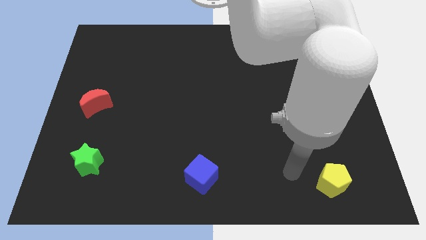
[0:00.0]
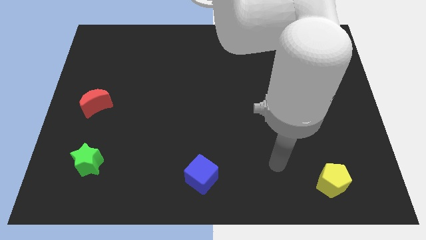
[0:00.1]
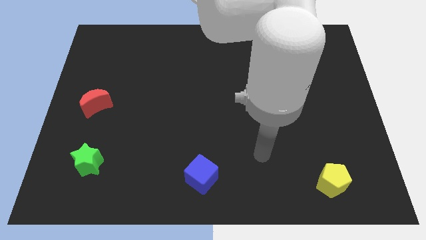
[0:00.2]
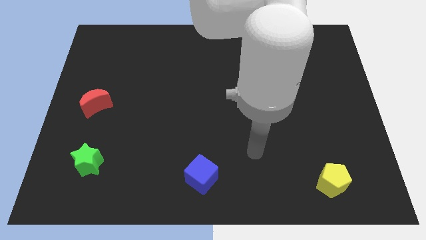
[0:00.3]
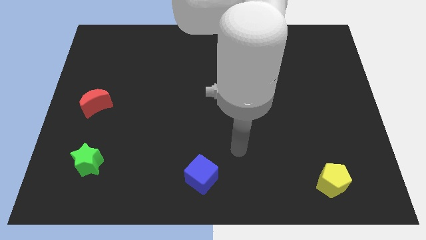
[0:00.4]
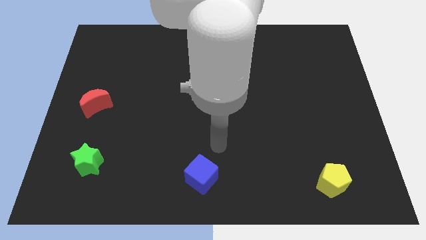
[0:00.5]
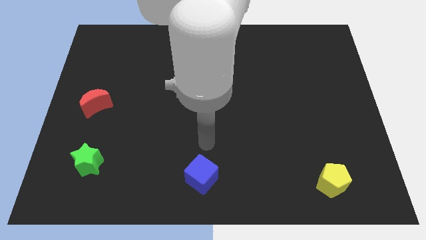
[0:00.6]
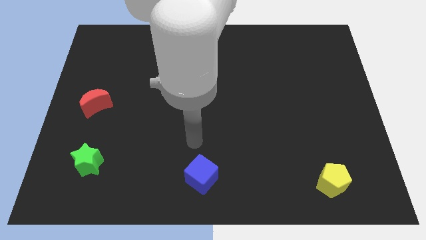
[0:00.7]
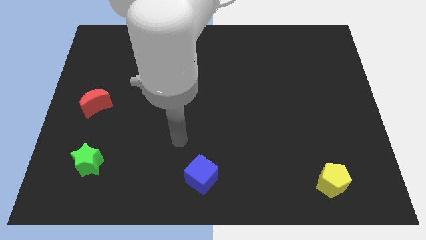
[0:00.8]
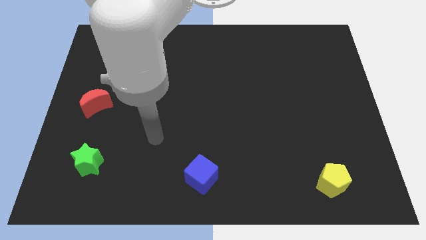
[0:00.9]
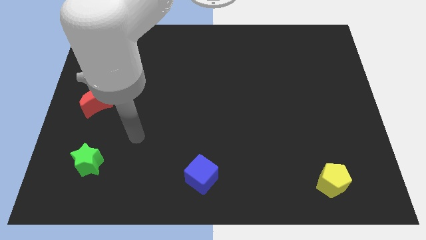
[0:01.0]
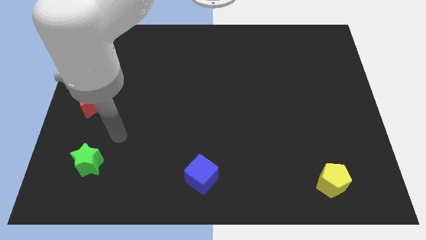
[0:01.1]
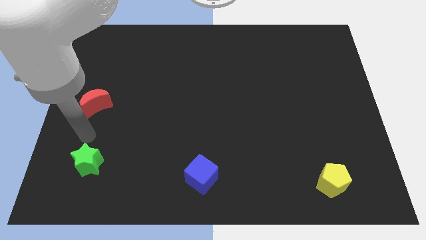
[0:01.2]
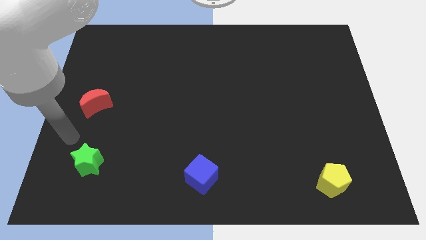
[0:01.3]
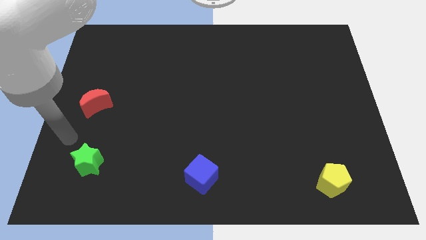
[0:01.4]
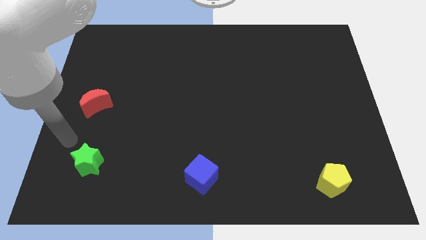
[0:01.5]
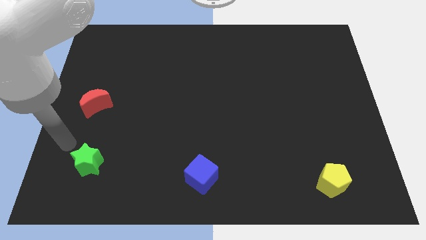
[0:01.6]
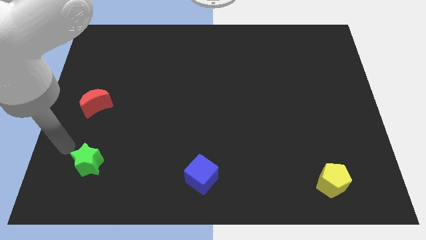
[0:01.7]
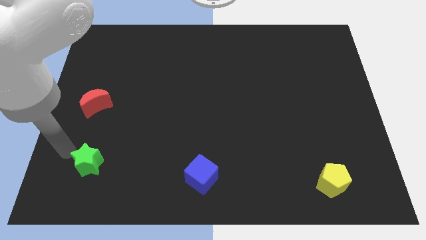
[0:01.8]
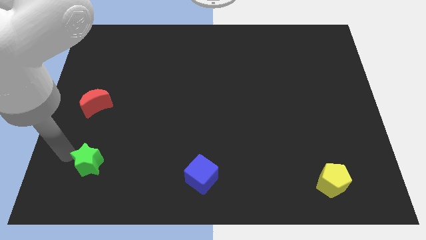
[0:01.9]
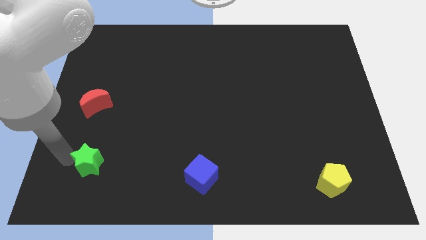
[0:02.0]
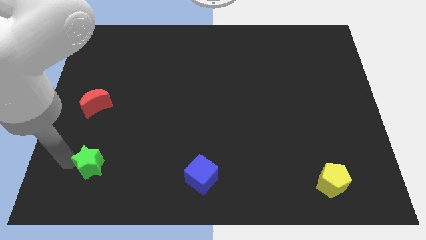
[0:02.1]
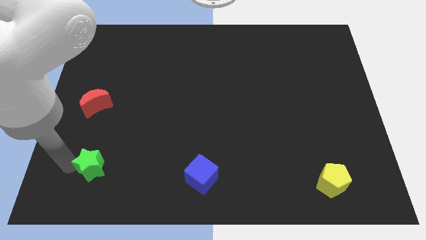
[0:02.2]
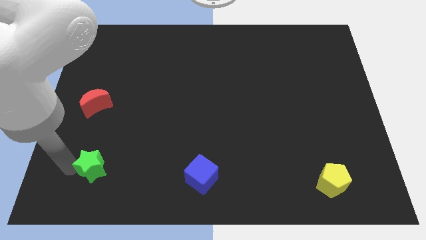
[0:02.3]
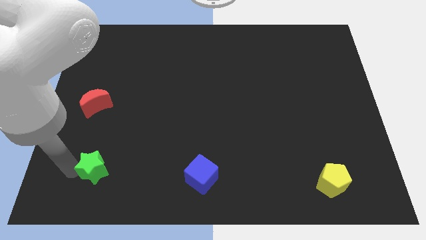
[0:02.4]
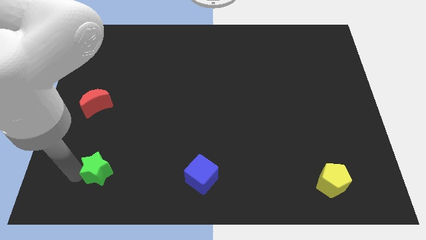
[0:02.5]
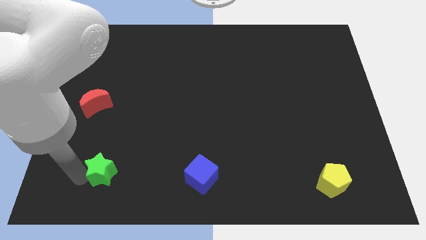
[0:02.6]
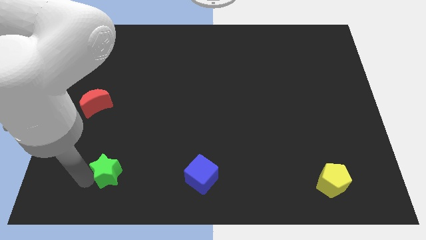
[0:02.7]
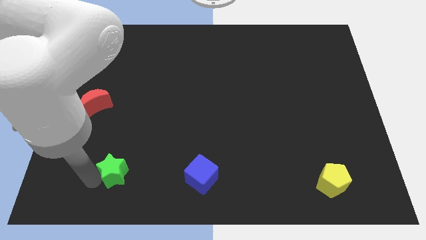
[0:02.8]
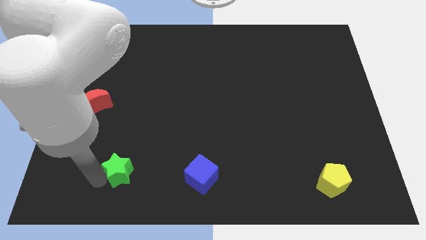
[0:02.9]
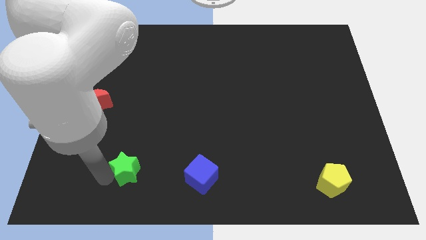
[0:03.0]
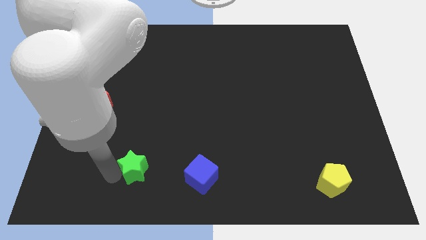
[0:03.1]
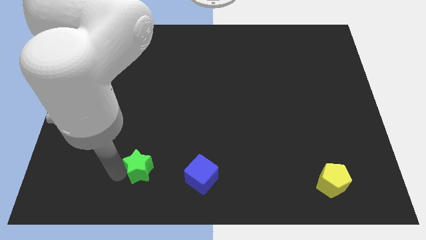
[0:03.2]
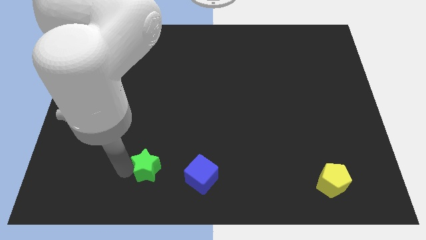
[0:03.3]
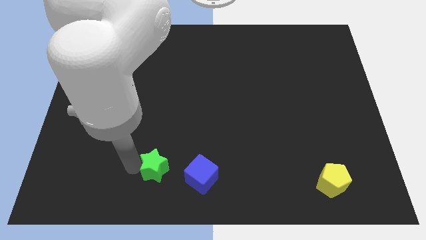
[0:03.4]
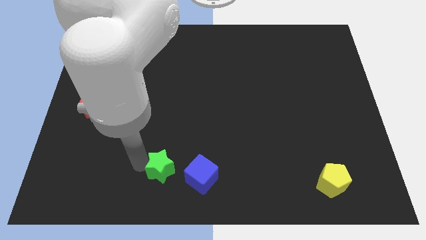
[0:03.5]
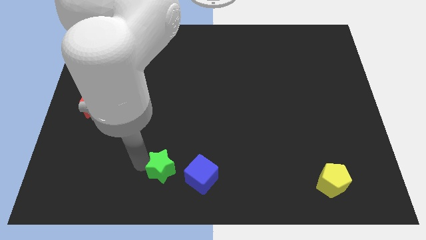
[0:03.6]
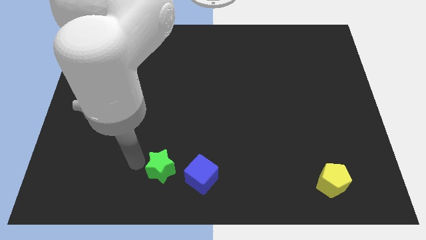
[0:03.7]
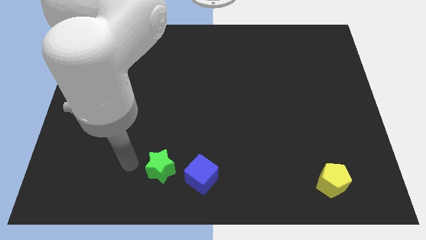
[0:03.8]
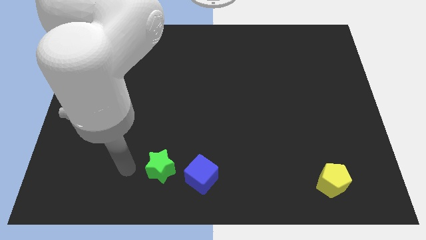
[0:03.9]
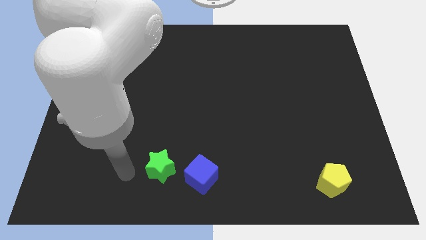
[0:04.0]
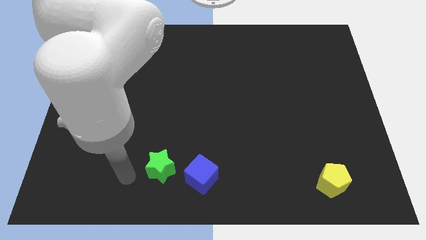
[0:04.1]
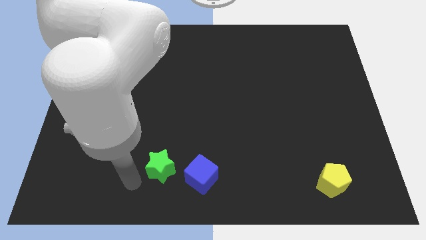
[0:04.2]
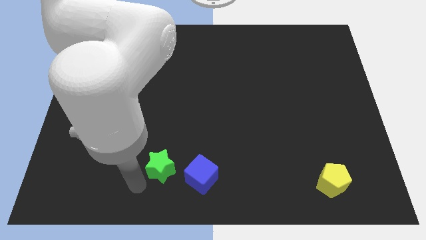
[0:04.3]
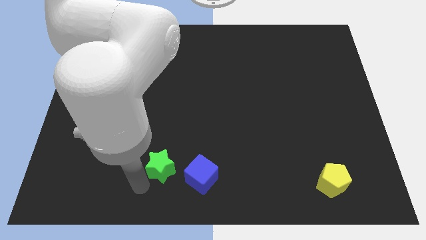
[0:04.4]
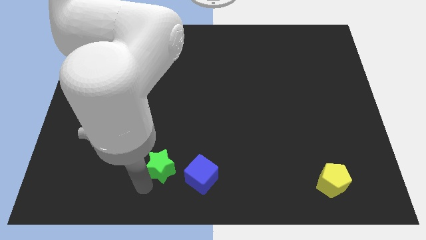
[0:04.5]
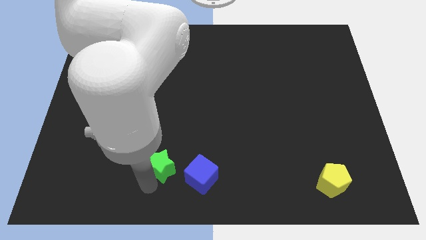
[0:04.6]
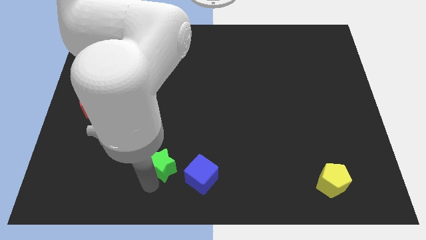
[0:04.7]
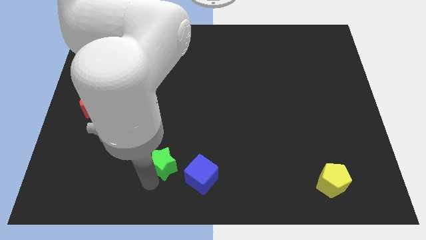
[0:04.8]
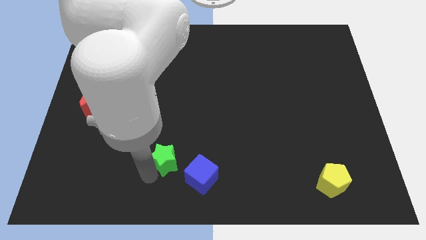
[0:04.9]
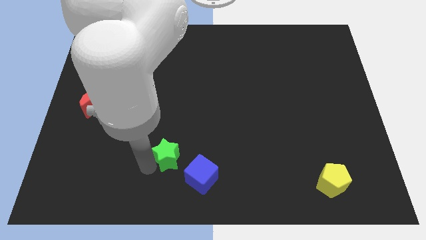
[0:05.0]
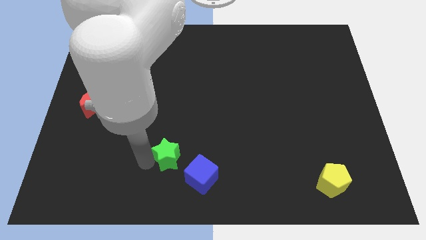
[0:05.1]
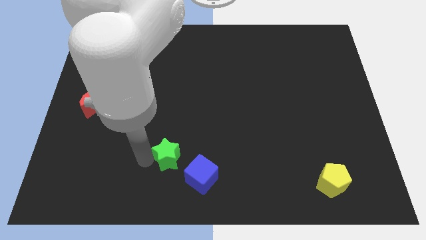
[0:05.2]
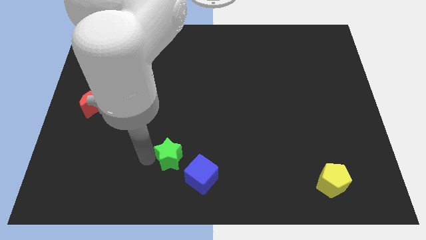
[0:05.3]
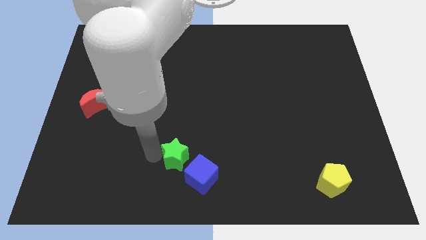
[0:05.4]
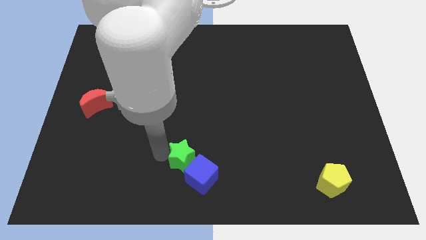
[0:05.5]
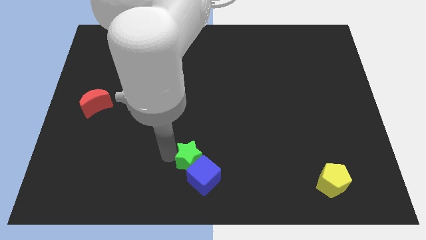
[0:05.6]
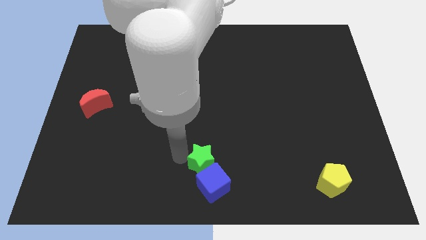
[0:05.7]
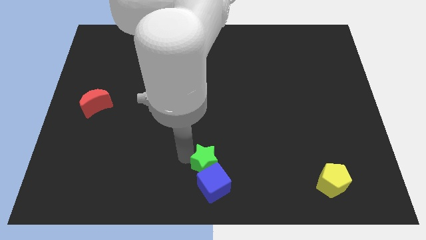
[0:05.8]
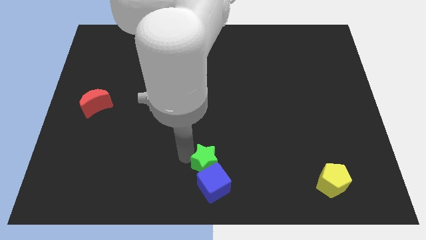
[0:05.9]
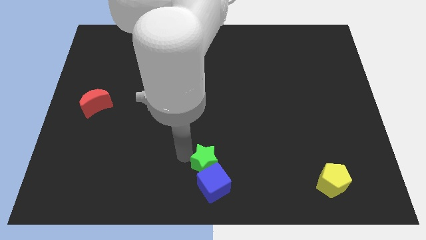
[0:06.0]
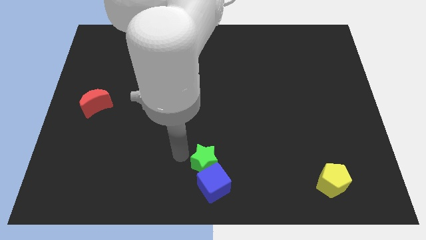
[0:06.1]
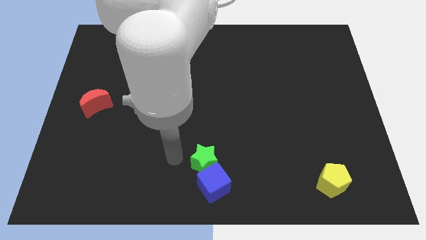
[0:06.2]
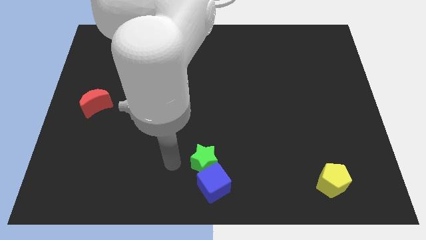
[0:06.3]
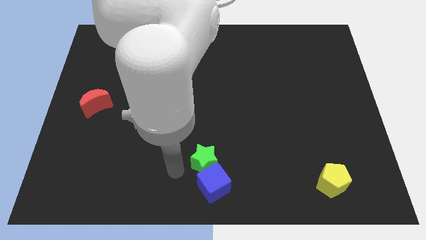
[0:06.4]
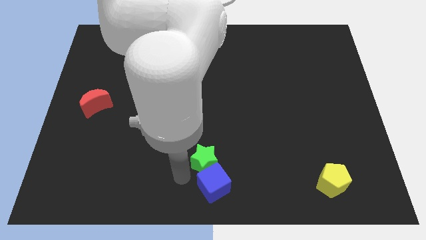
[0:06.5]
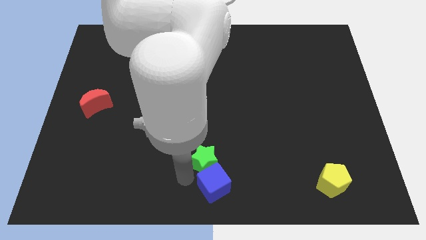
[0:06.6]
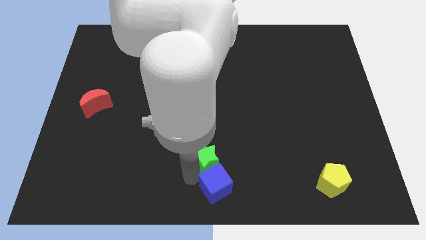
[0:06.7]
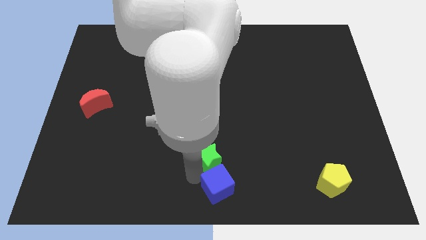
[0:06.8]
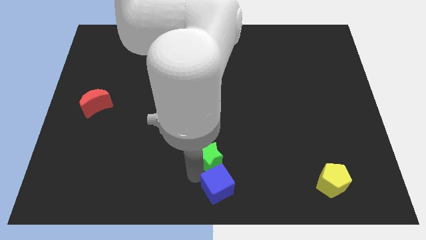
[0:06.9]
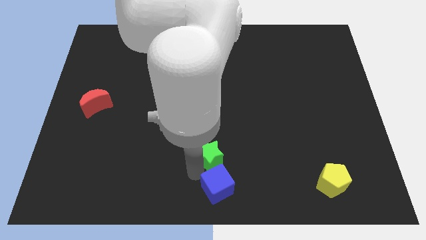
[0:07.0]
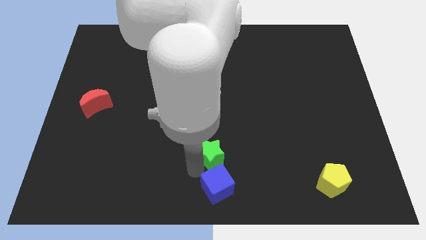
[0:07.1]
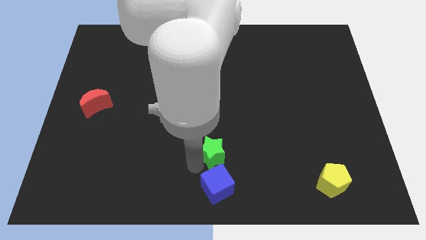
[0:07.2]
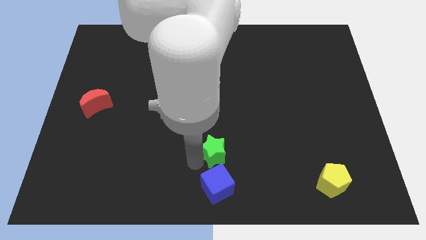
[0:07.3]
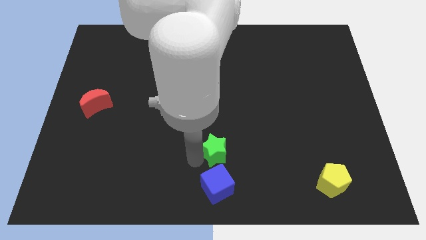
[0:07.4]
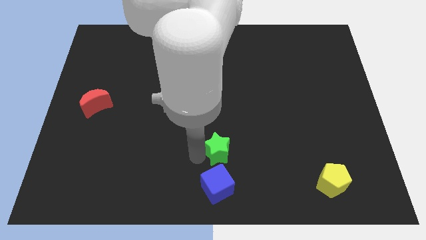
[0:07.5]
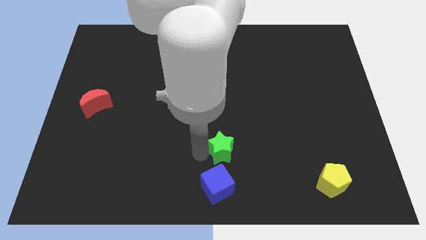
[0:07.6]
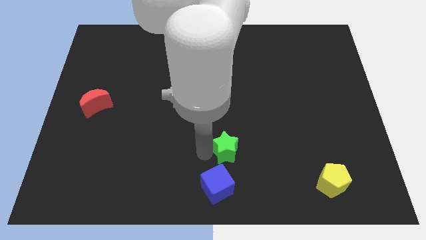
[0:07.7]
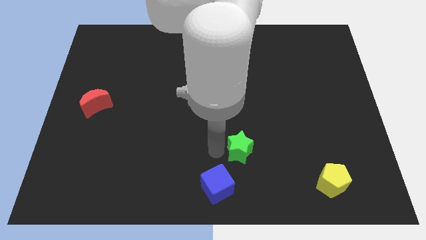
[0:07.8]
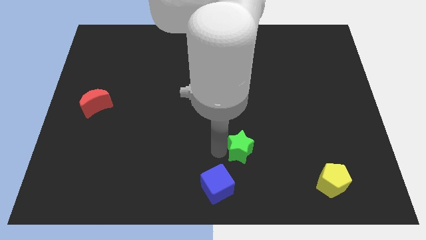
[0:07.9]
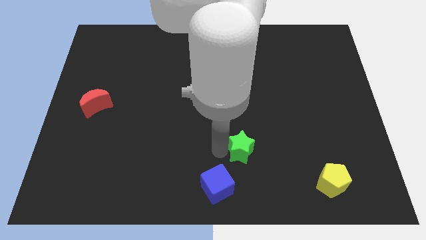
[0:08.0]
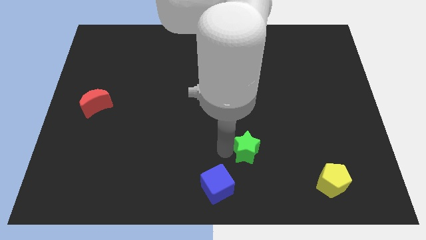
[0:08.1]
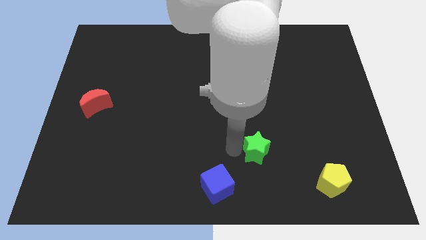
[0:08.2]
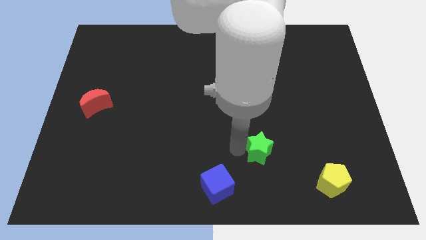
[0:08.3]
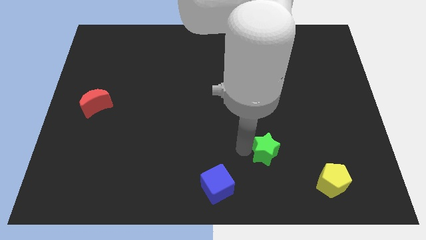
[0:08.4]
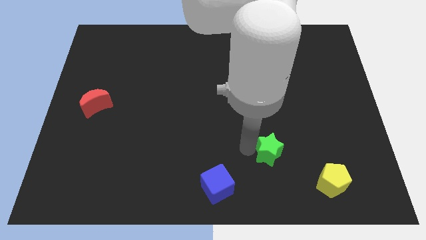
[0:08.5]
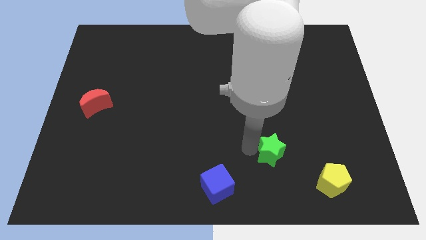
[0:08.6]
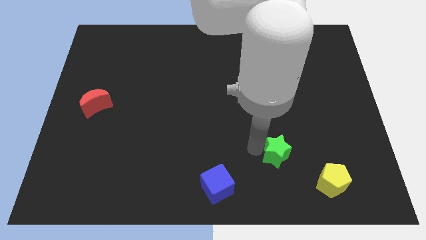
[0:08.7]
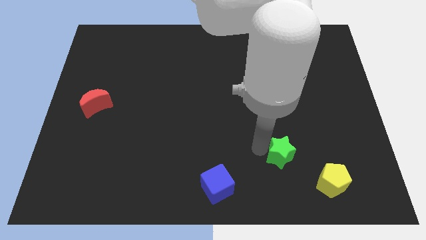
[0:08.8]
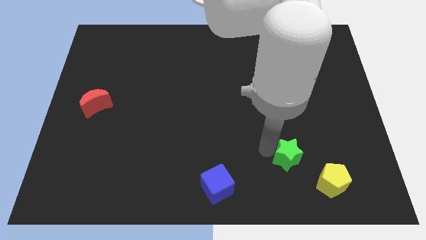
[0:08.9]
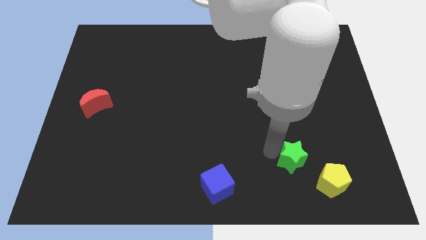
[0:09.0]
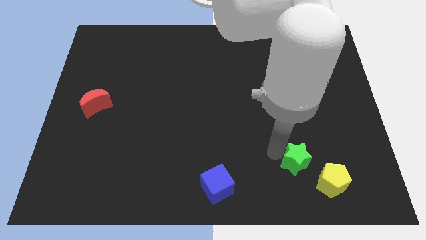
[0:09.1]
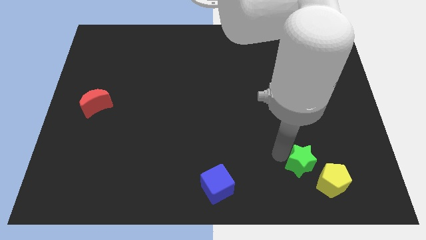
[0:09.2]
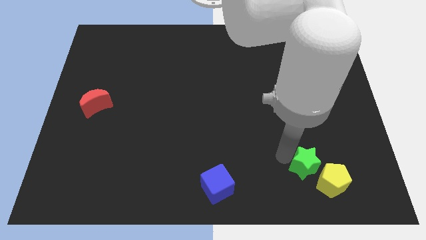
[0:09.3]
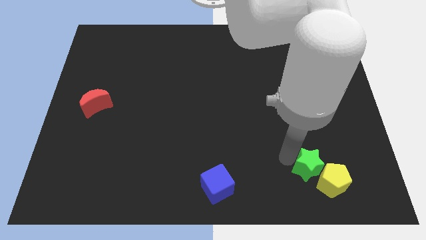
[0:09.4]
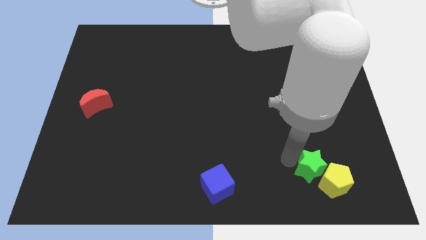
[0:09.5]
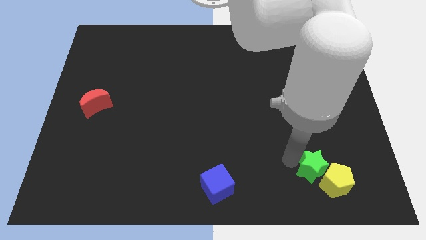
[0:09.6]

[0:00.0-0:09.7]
put the star towards the yellow pentagon
